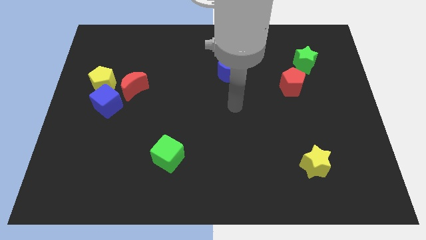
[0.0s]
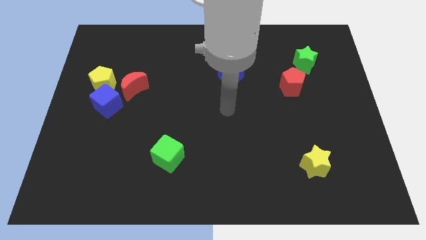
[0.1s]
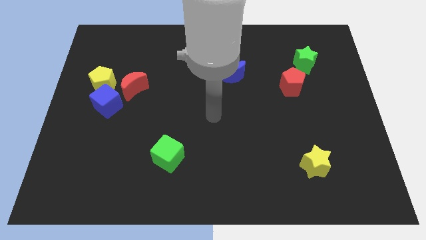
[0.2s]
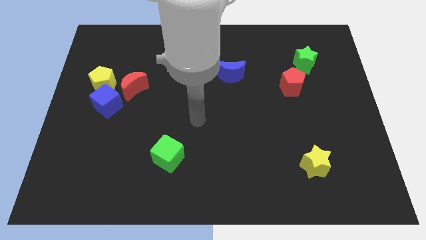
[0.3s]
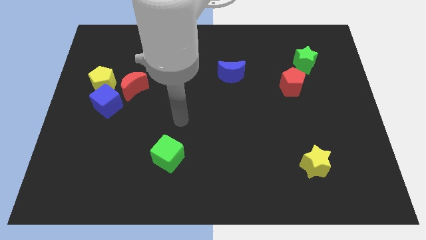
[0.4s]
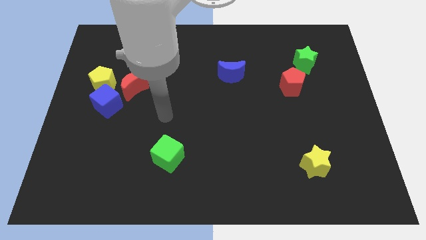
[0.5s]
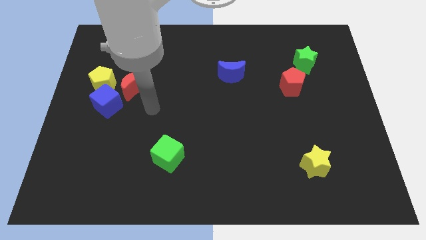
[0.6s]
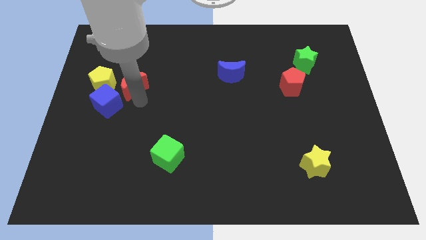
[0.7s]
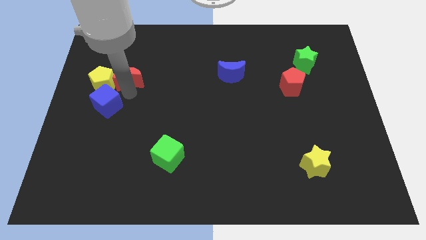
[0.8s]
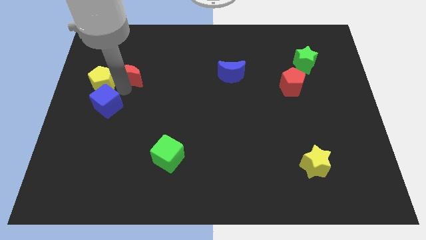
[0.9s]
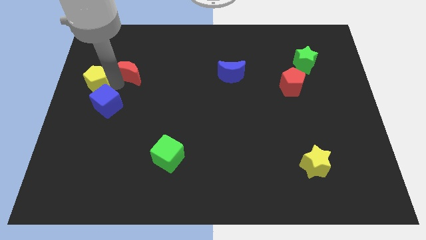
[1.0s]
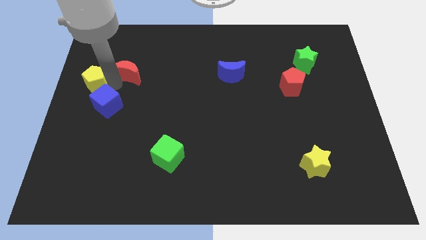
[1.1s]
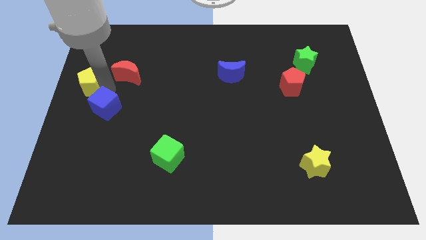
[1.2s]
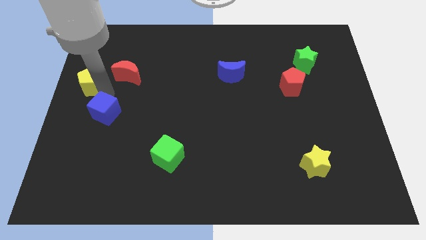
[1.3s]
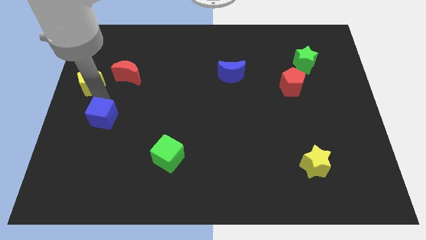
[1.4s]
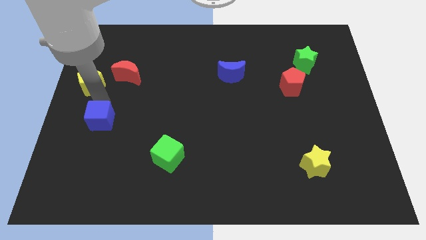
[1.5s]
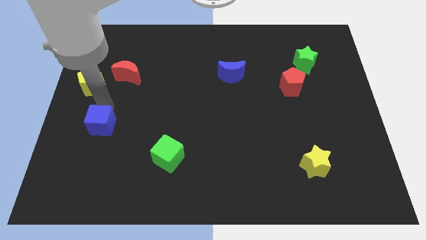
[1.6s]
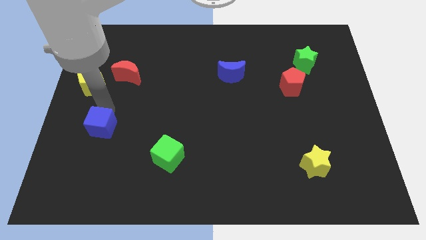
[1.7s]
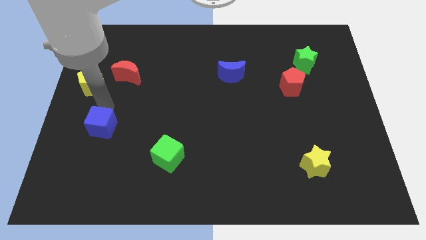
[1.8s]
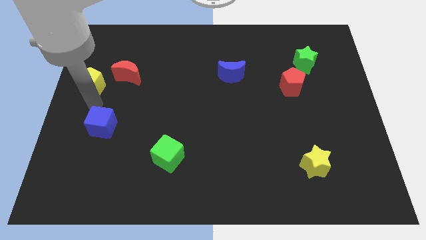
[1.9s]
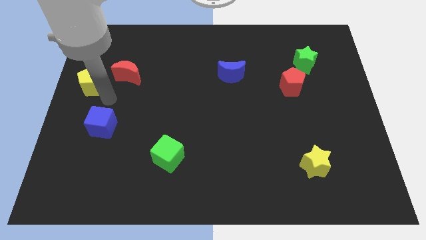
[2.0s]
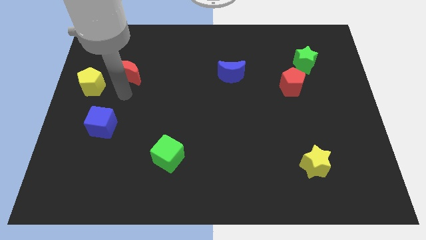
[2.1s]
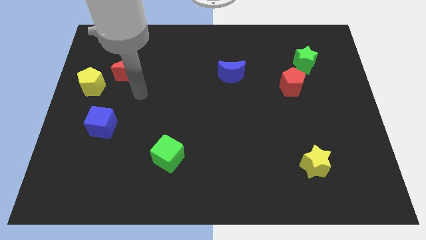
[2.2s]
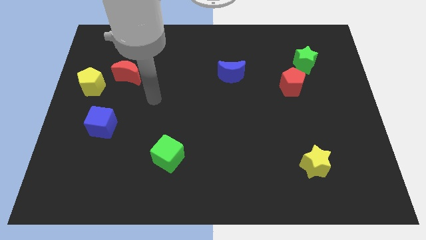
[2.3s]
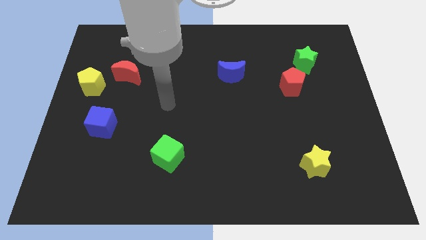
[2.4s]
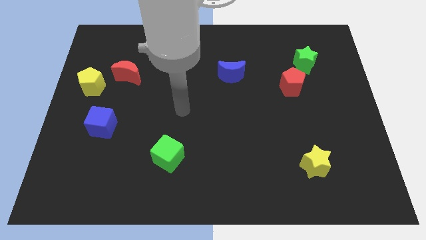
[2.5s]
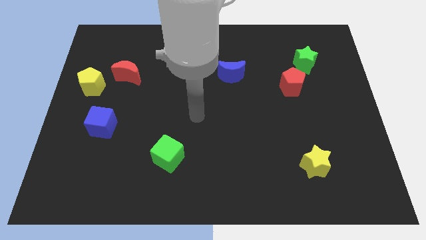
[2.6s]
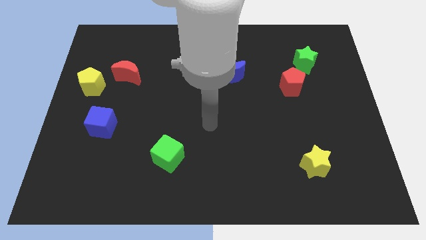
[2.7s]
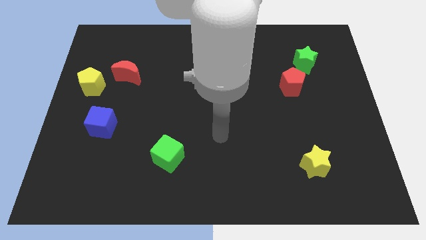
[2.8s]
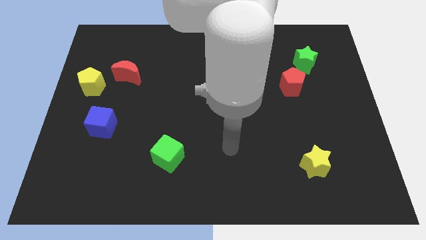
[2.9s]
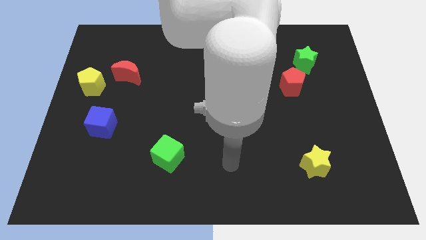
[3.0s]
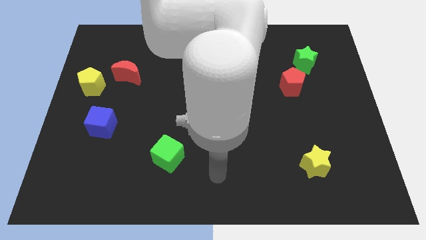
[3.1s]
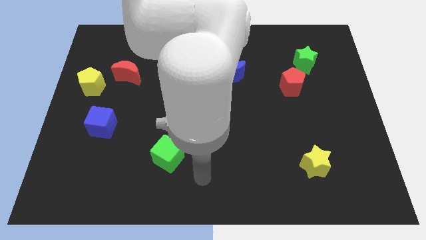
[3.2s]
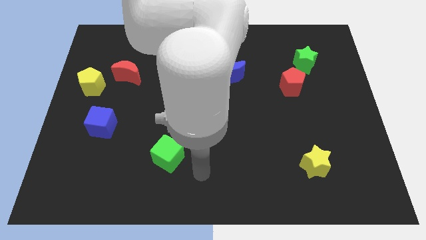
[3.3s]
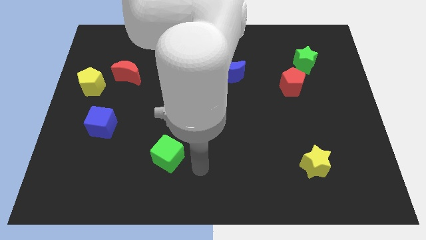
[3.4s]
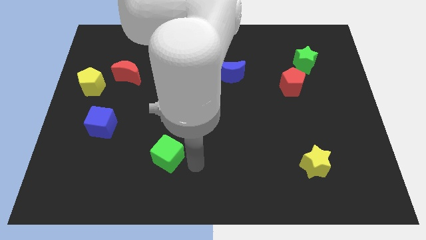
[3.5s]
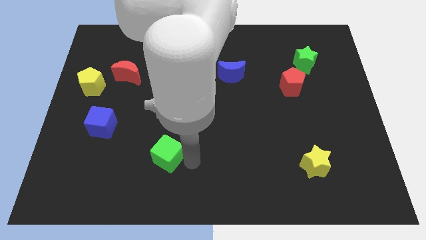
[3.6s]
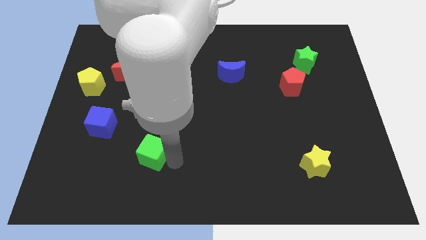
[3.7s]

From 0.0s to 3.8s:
separate the blue cube and yellow pentagon

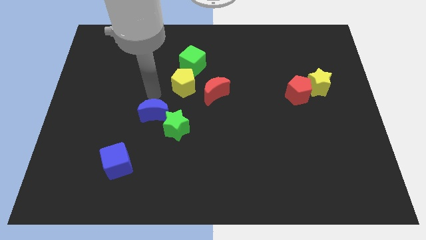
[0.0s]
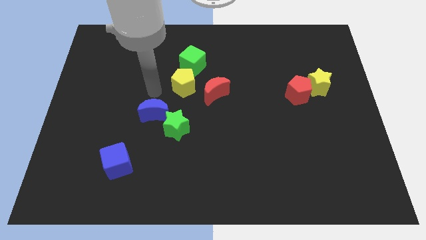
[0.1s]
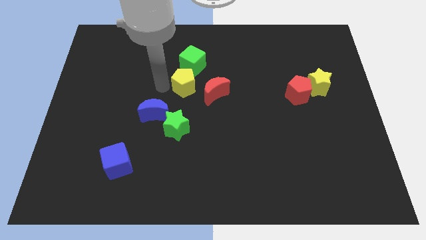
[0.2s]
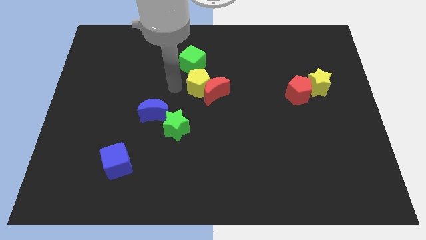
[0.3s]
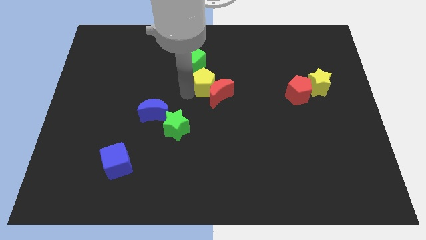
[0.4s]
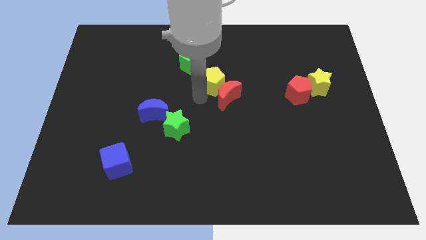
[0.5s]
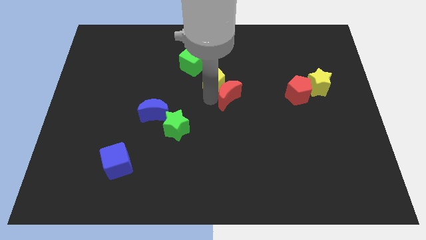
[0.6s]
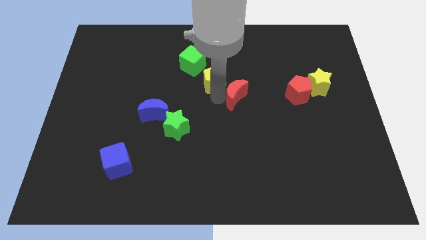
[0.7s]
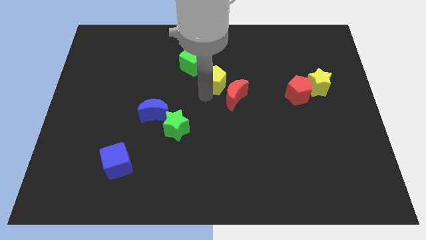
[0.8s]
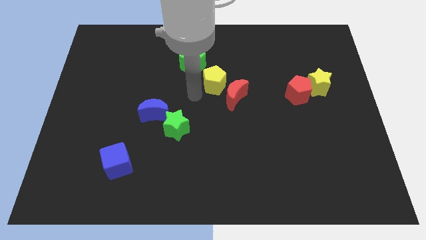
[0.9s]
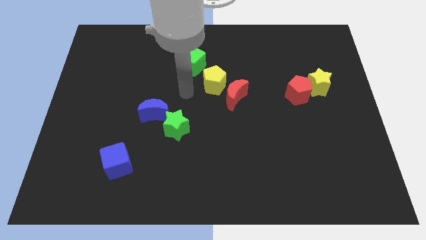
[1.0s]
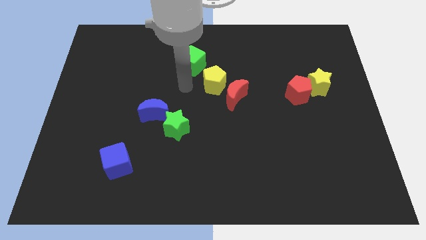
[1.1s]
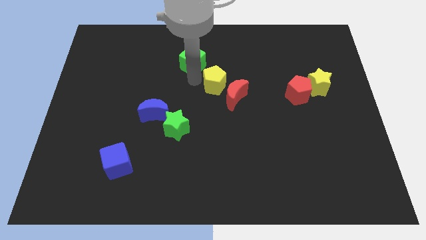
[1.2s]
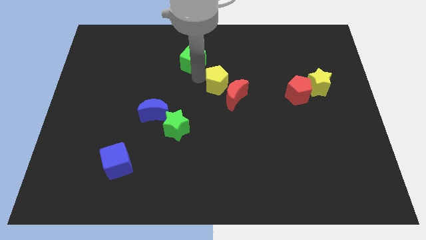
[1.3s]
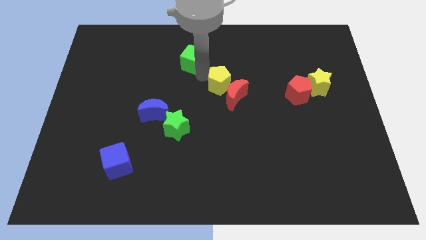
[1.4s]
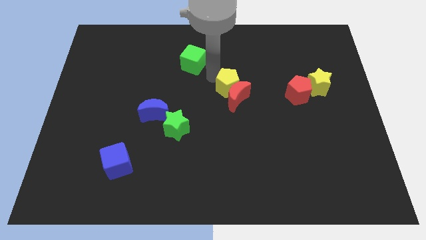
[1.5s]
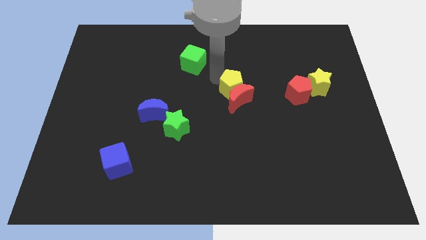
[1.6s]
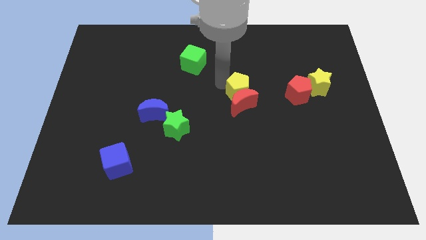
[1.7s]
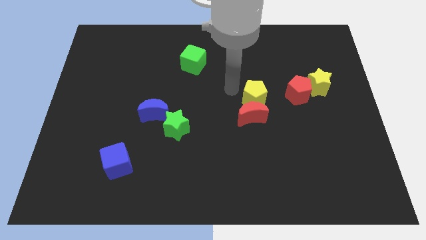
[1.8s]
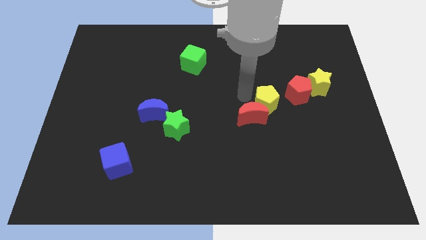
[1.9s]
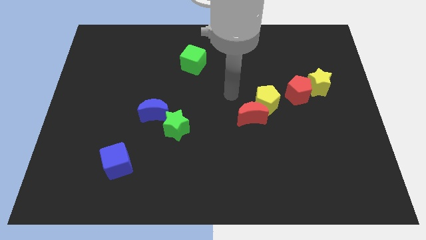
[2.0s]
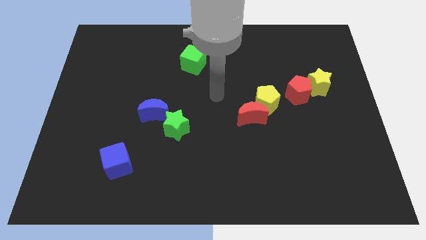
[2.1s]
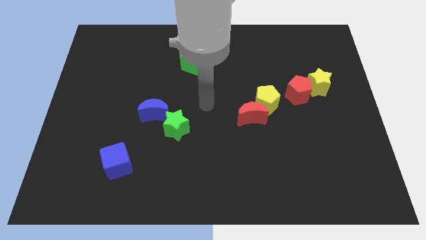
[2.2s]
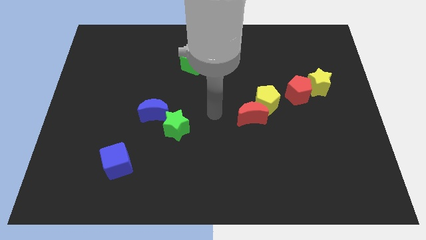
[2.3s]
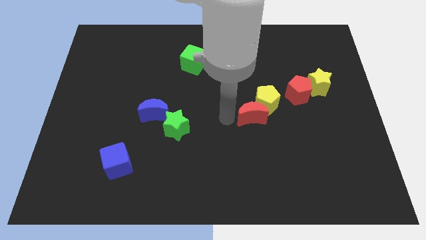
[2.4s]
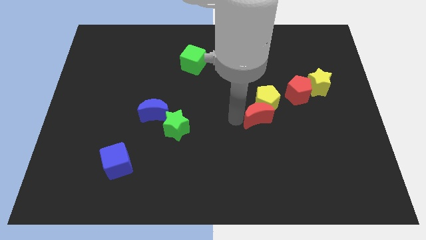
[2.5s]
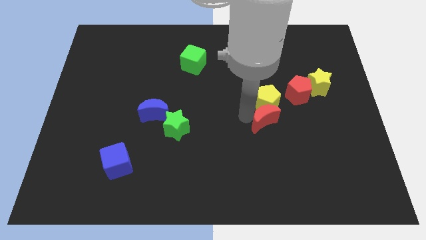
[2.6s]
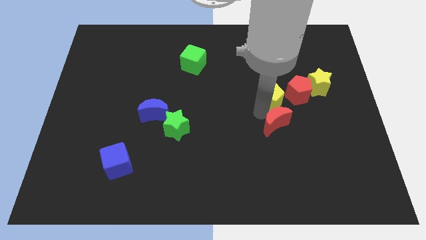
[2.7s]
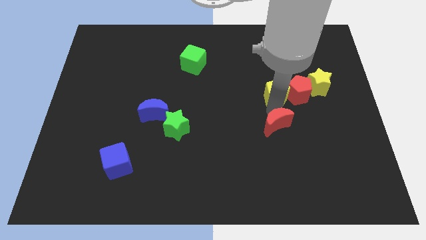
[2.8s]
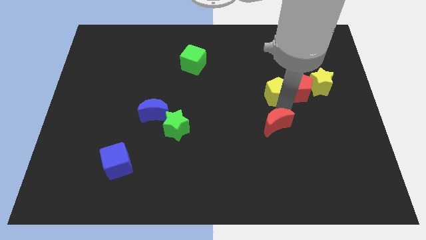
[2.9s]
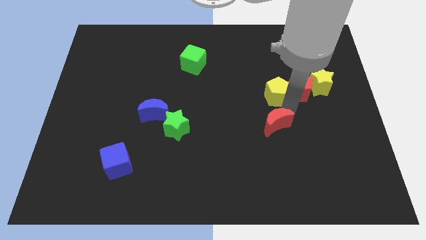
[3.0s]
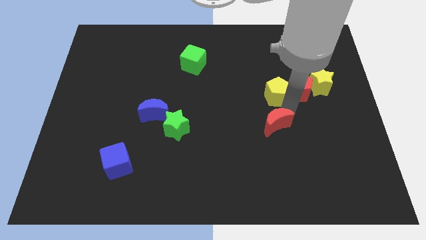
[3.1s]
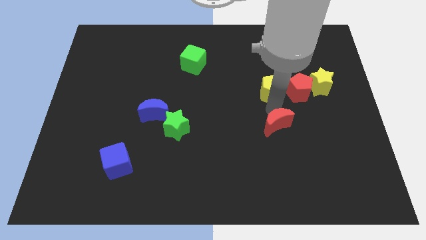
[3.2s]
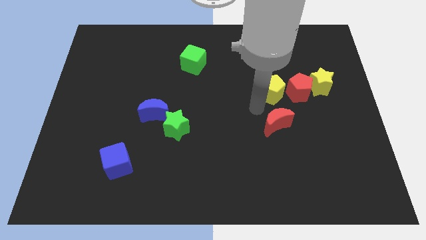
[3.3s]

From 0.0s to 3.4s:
move the yellow pentagon and red moon to the right side of the board

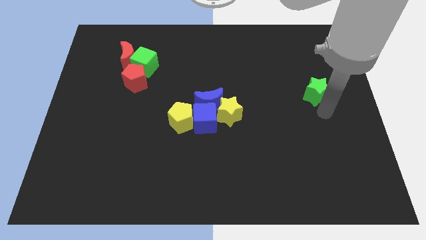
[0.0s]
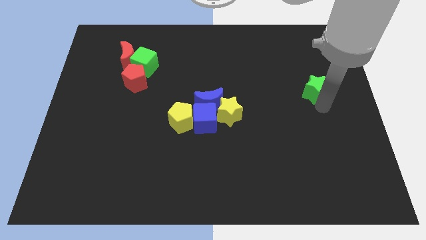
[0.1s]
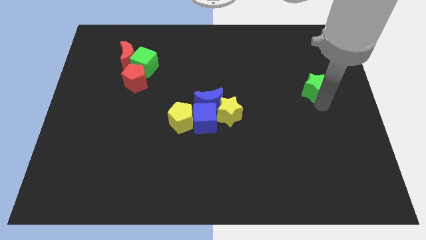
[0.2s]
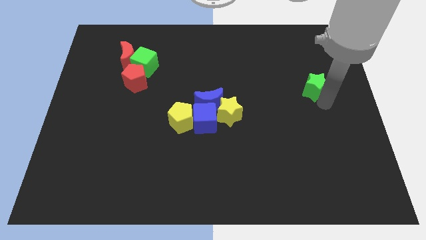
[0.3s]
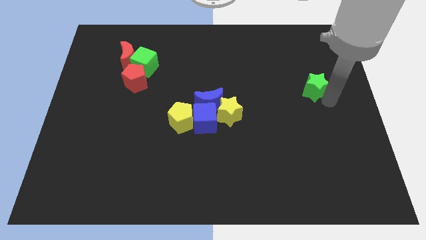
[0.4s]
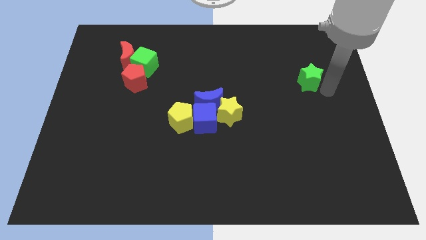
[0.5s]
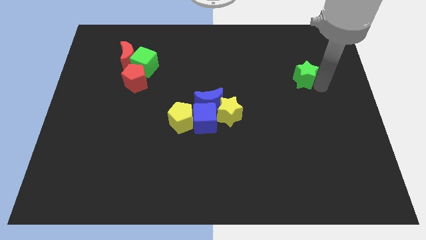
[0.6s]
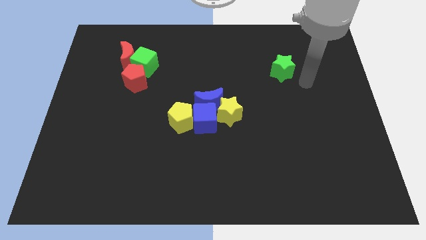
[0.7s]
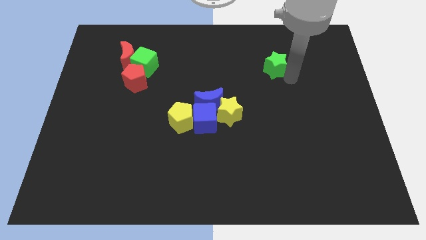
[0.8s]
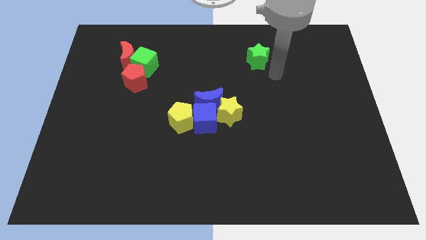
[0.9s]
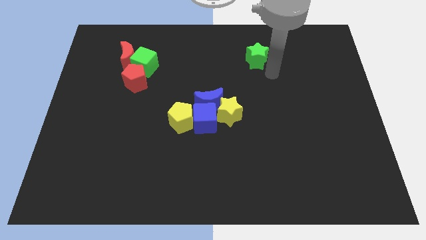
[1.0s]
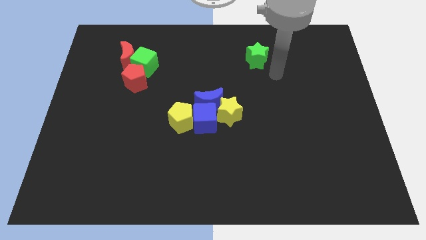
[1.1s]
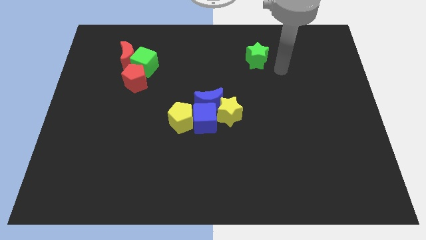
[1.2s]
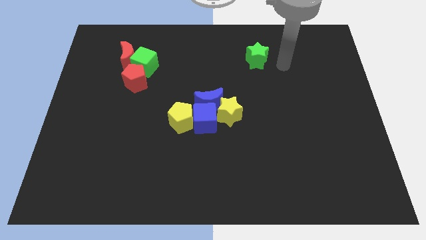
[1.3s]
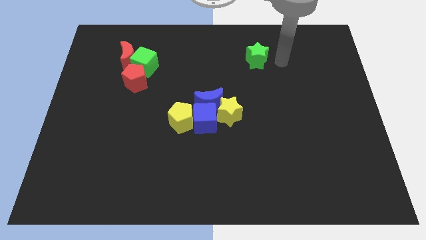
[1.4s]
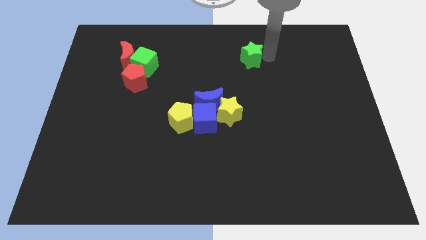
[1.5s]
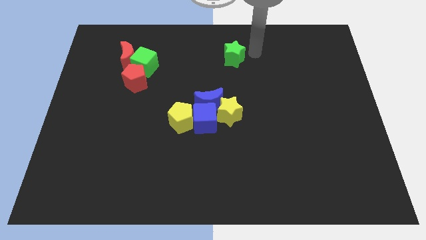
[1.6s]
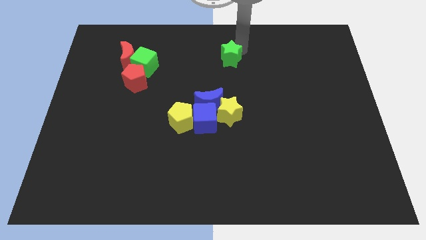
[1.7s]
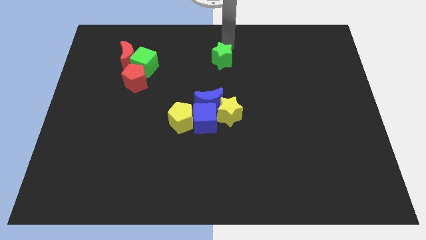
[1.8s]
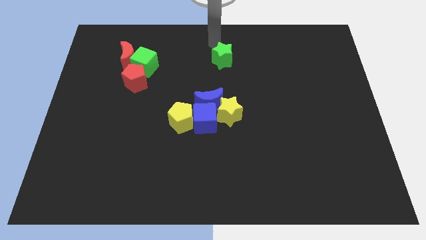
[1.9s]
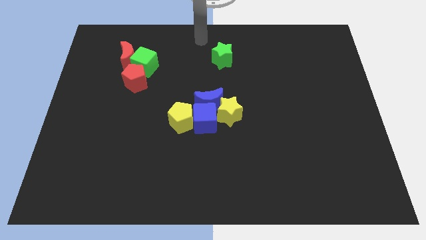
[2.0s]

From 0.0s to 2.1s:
push the green star above the yellow star
